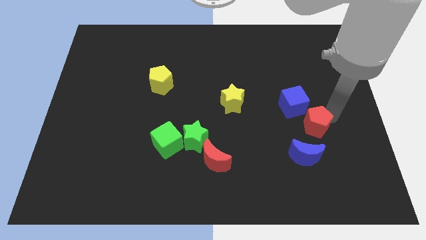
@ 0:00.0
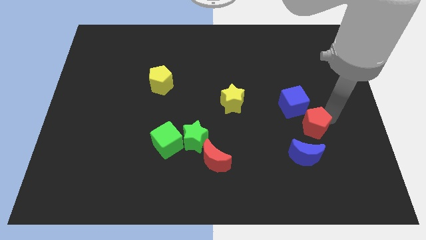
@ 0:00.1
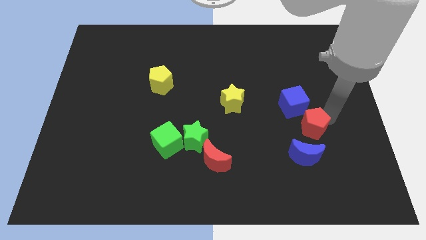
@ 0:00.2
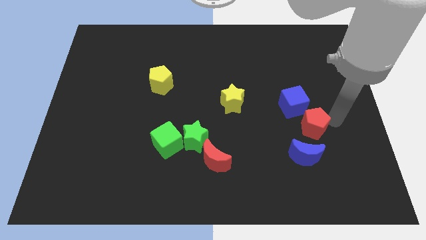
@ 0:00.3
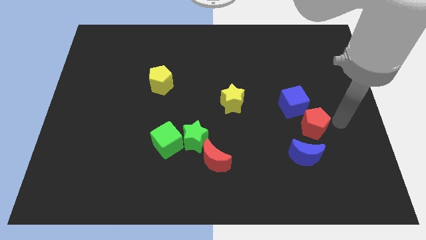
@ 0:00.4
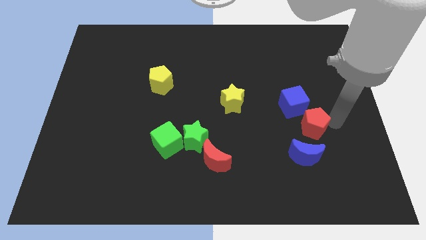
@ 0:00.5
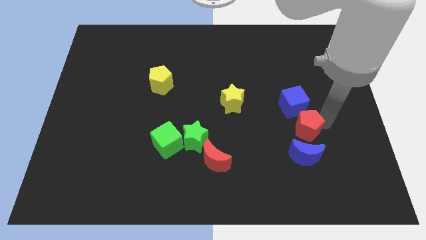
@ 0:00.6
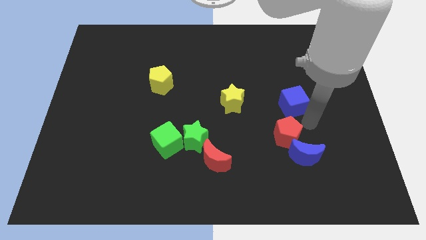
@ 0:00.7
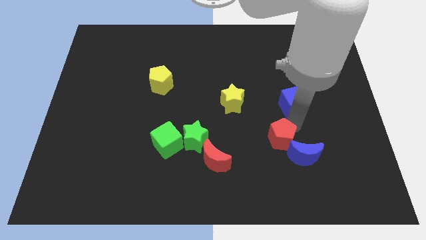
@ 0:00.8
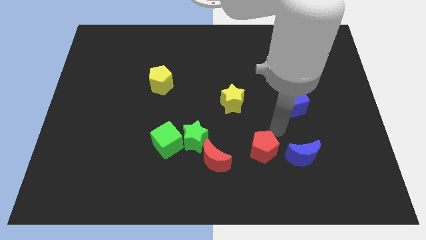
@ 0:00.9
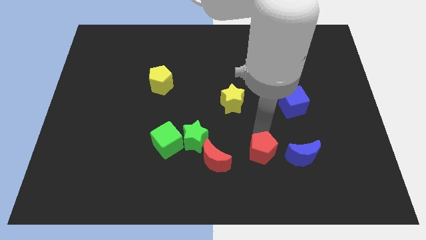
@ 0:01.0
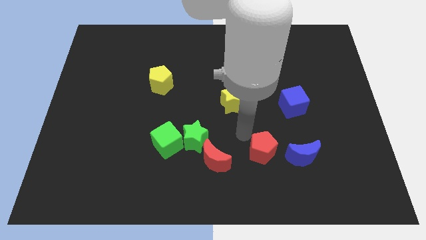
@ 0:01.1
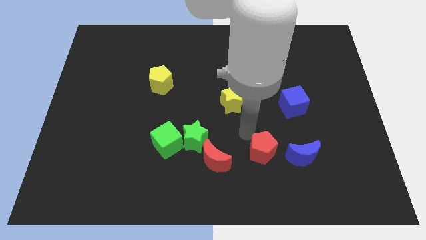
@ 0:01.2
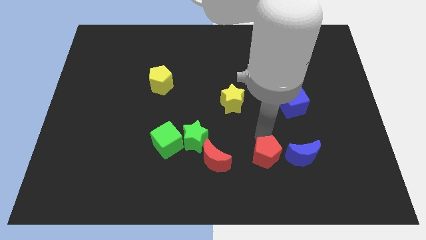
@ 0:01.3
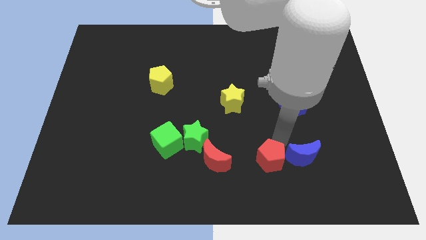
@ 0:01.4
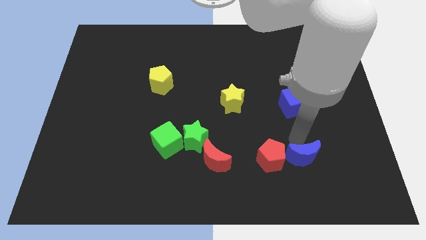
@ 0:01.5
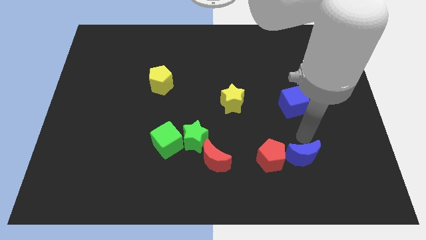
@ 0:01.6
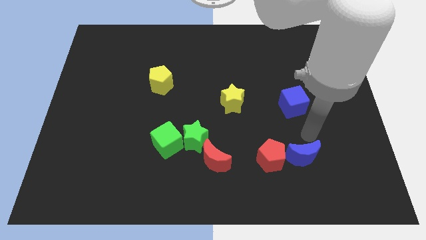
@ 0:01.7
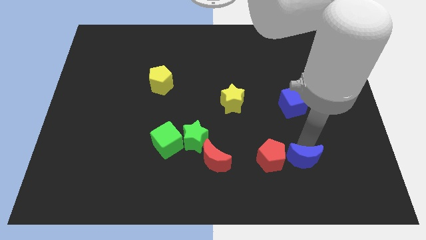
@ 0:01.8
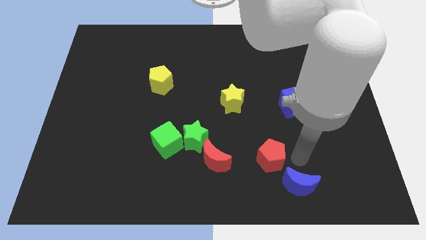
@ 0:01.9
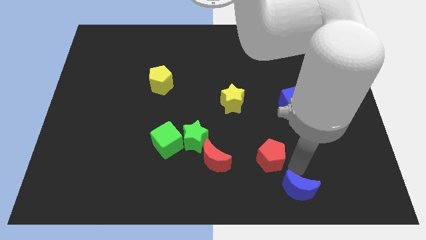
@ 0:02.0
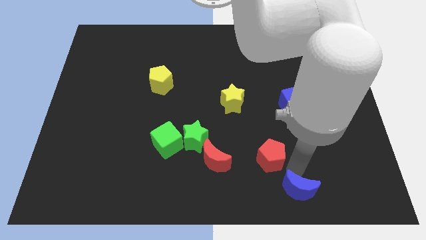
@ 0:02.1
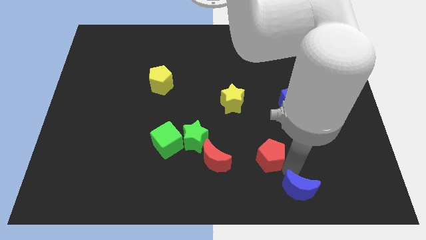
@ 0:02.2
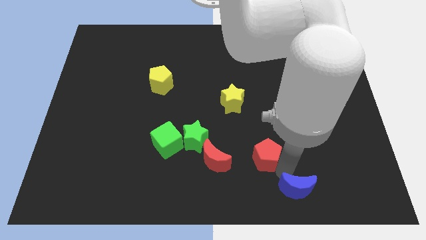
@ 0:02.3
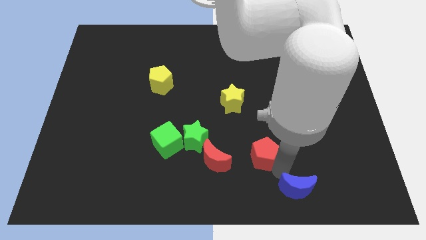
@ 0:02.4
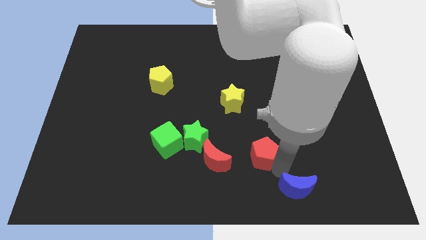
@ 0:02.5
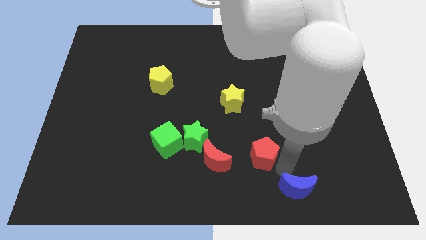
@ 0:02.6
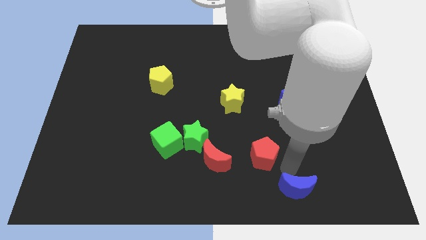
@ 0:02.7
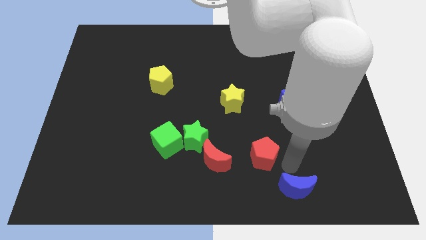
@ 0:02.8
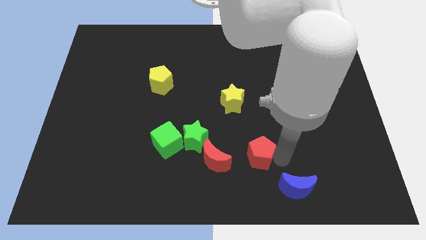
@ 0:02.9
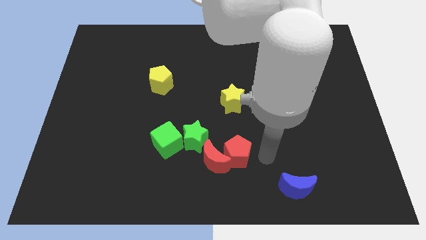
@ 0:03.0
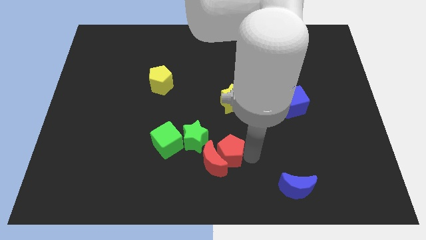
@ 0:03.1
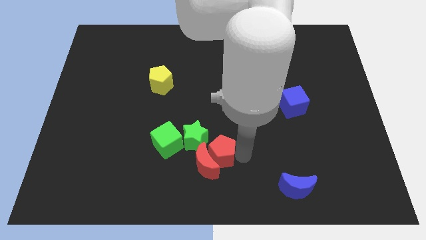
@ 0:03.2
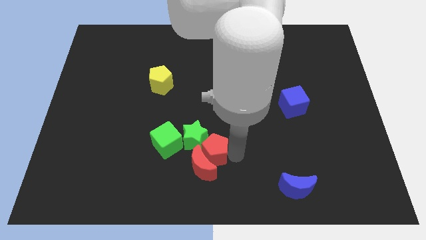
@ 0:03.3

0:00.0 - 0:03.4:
drag the red pentagon and place it below the green star

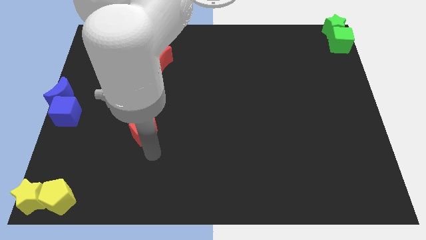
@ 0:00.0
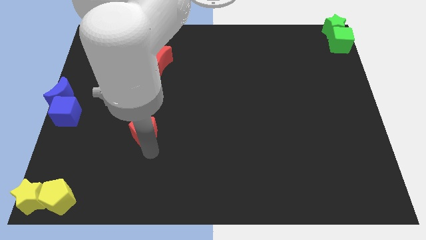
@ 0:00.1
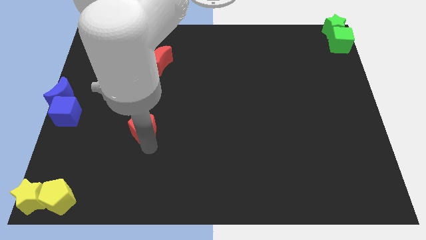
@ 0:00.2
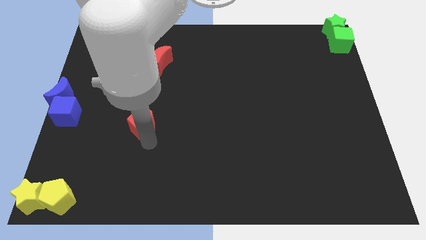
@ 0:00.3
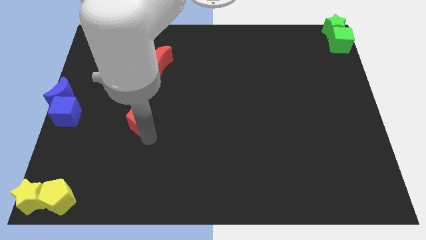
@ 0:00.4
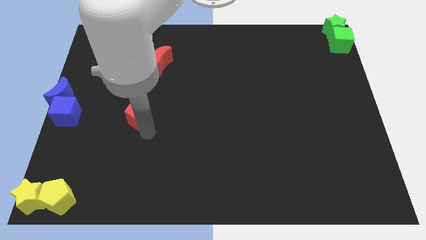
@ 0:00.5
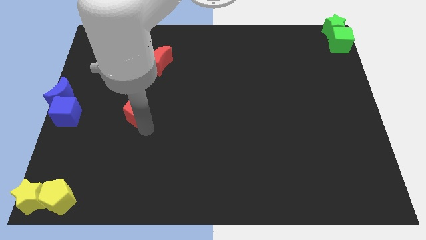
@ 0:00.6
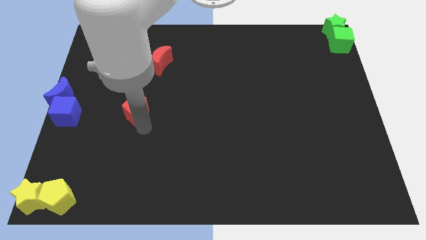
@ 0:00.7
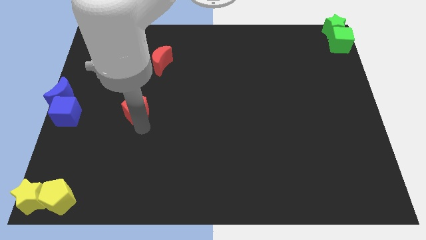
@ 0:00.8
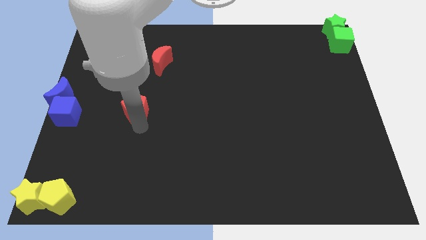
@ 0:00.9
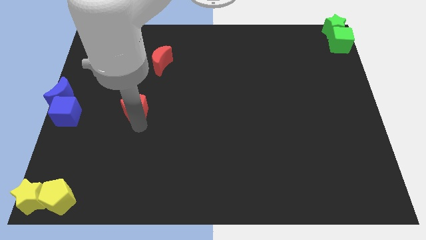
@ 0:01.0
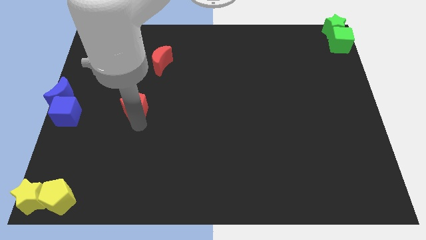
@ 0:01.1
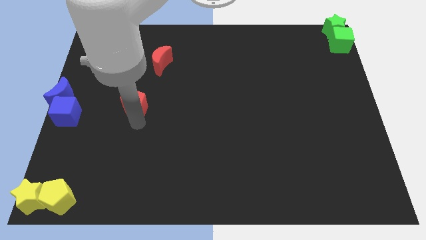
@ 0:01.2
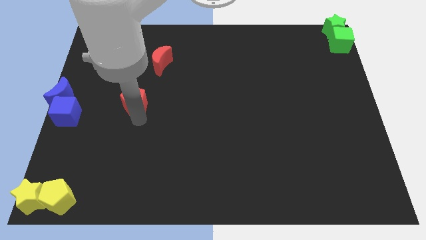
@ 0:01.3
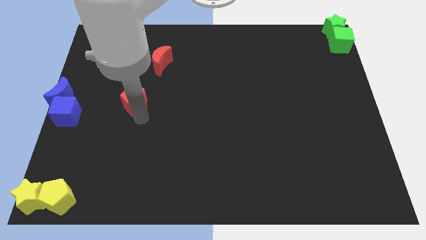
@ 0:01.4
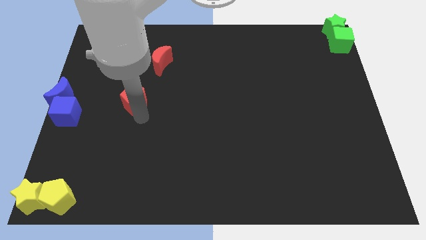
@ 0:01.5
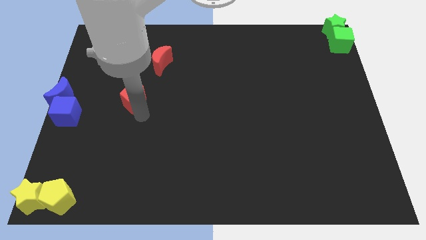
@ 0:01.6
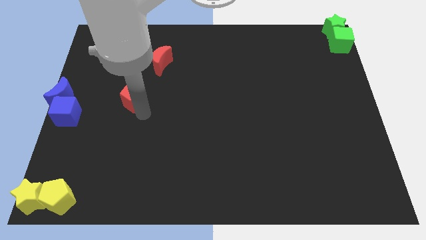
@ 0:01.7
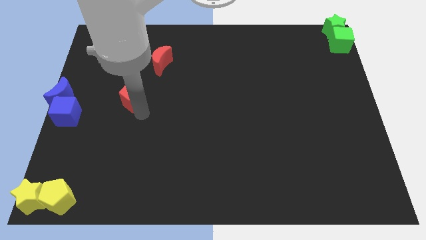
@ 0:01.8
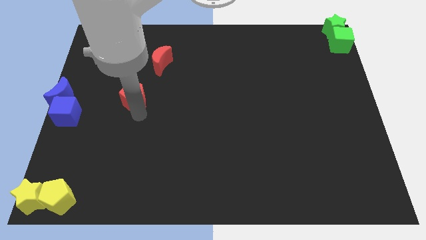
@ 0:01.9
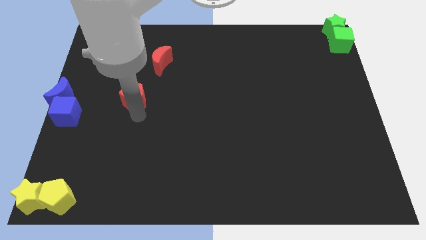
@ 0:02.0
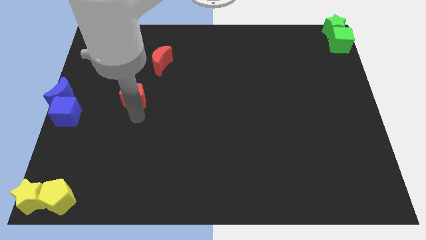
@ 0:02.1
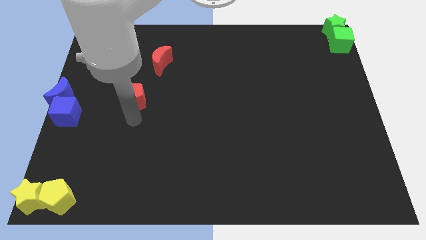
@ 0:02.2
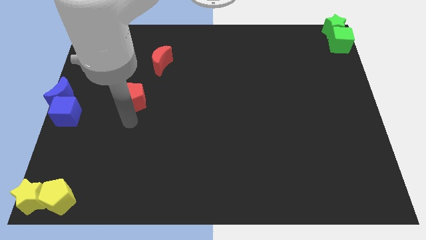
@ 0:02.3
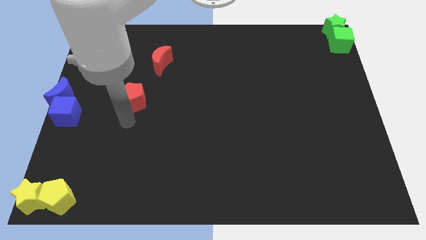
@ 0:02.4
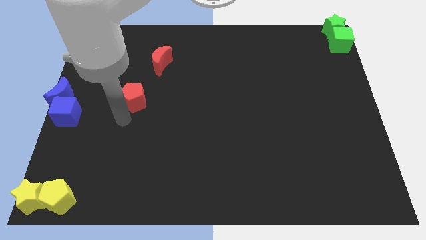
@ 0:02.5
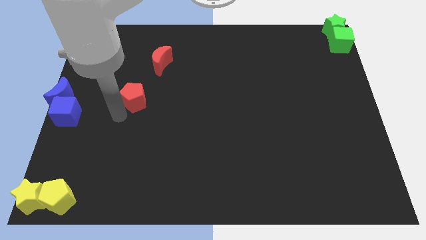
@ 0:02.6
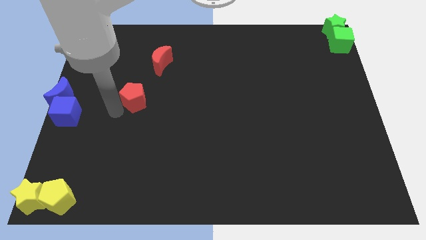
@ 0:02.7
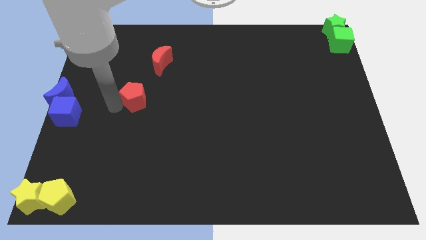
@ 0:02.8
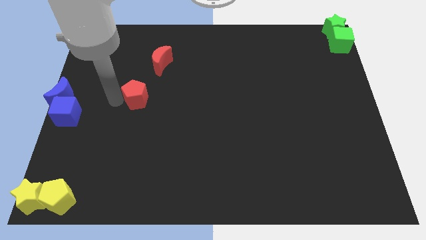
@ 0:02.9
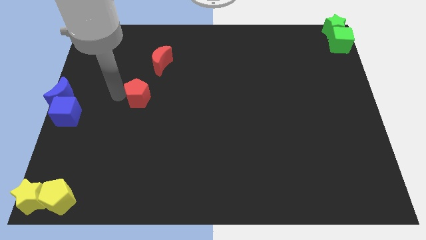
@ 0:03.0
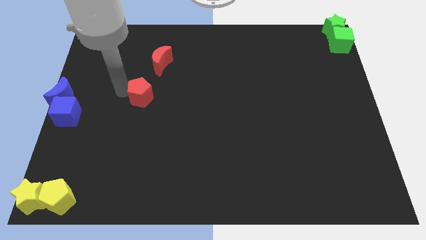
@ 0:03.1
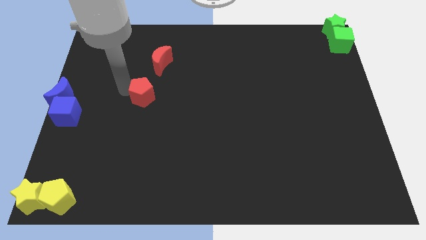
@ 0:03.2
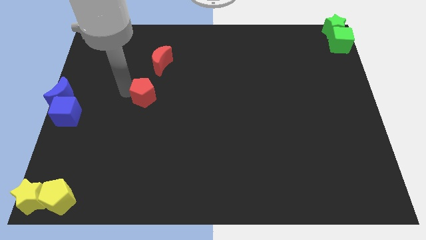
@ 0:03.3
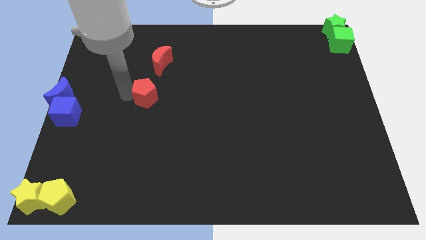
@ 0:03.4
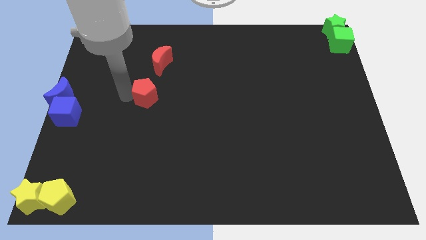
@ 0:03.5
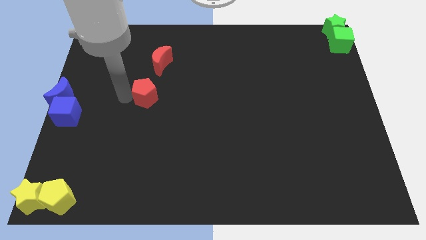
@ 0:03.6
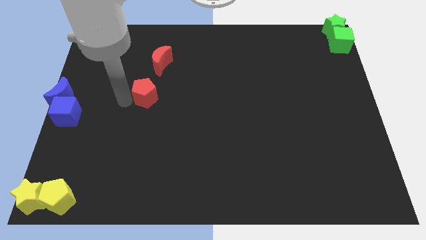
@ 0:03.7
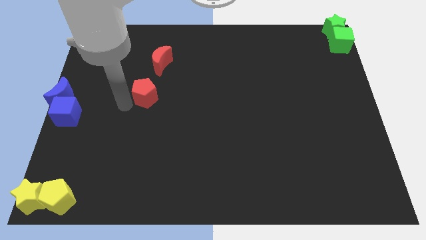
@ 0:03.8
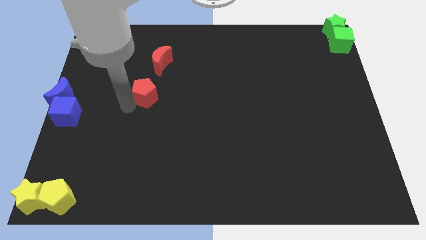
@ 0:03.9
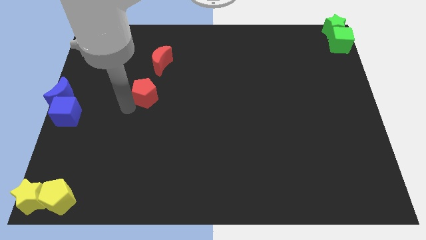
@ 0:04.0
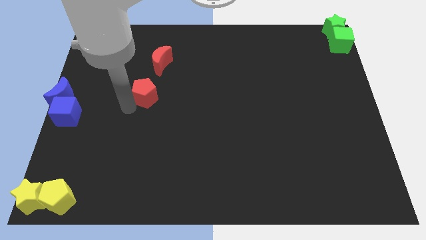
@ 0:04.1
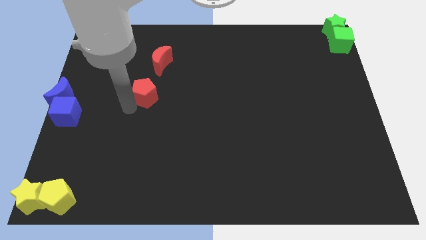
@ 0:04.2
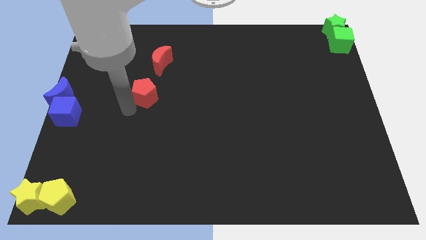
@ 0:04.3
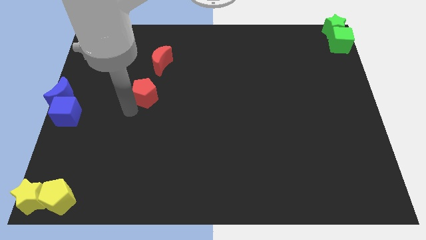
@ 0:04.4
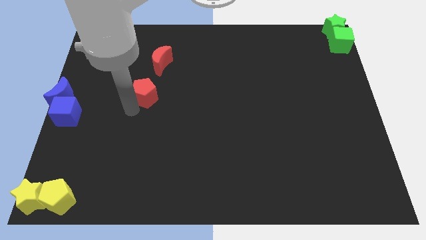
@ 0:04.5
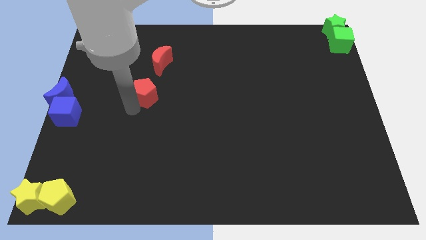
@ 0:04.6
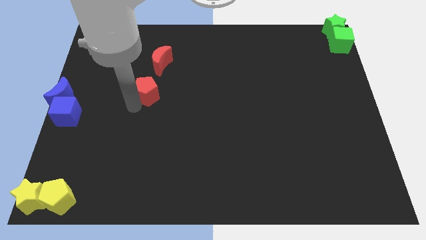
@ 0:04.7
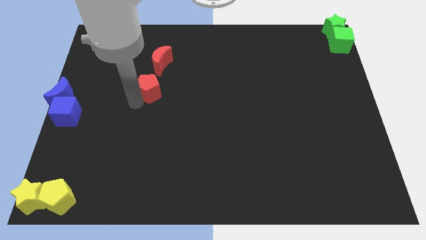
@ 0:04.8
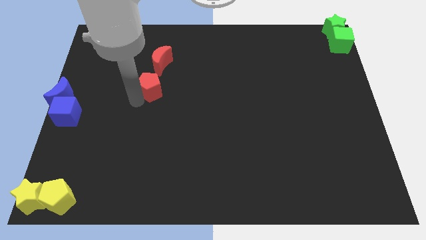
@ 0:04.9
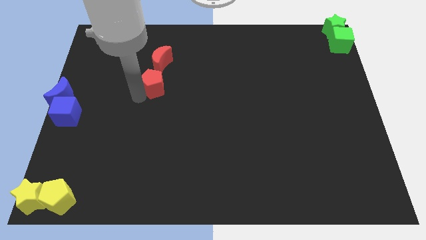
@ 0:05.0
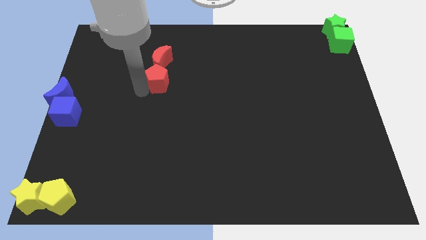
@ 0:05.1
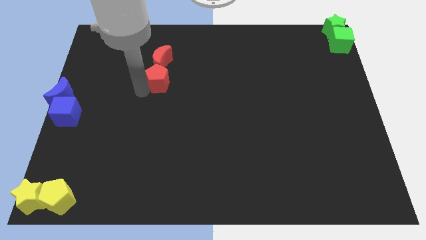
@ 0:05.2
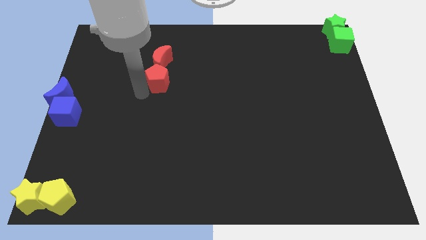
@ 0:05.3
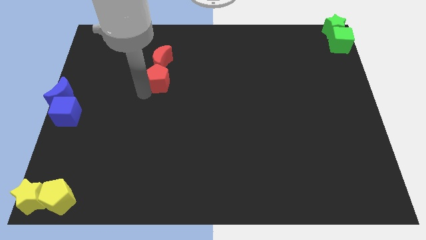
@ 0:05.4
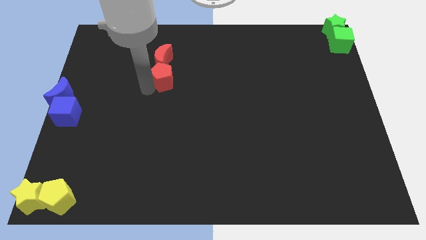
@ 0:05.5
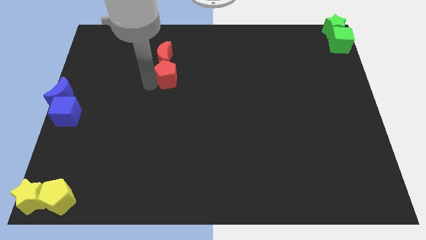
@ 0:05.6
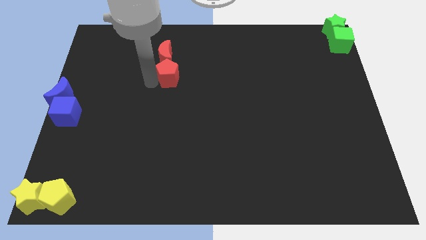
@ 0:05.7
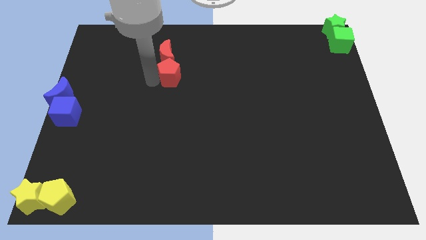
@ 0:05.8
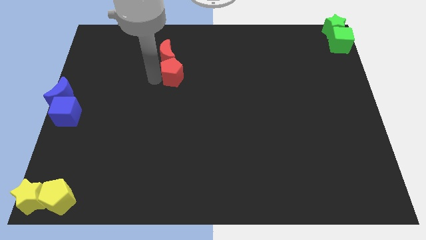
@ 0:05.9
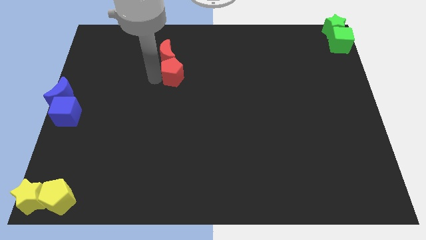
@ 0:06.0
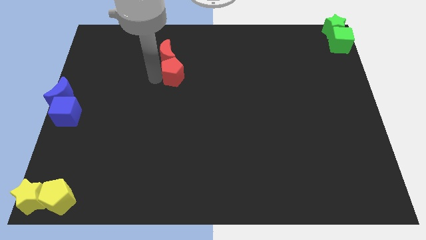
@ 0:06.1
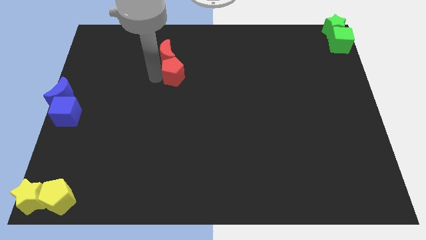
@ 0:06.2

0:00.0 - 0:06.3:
make the red pentagon to touch the bottom side of the red crescent
